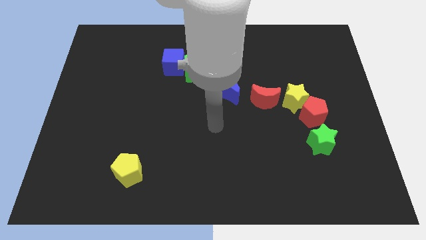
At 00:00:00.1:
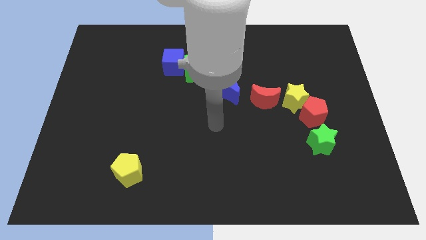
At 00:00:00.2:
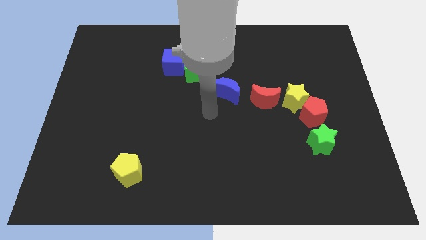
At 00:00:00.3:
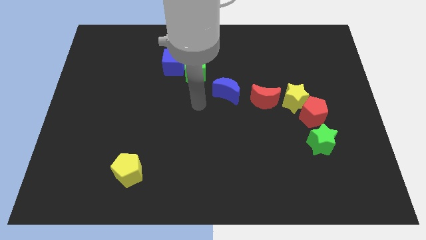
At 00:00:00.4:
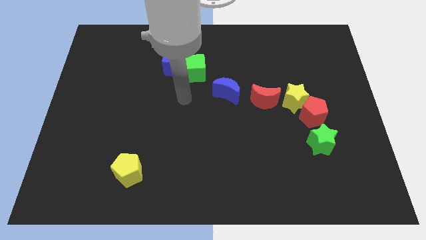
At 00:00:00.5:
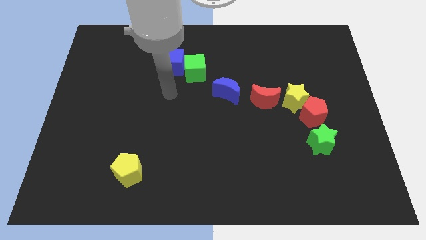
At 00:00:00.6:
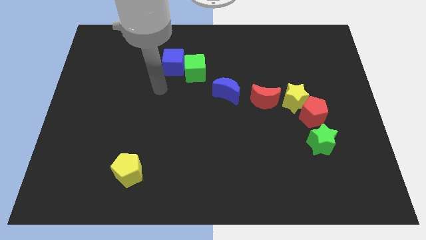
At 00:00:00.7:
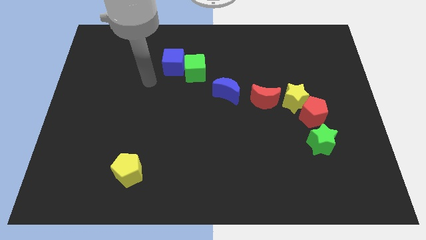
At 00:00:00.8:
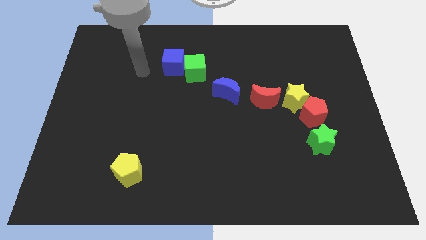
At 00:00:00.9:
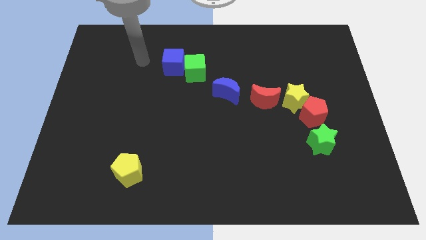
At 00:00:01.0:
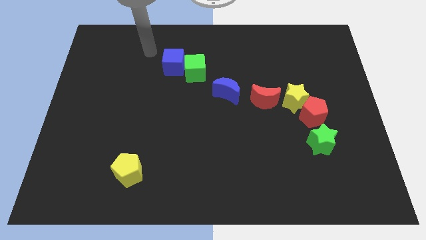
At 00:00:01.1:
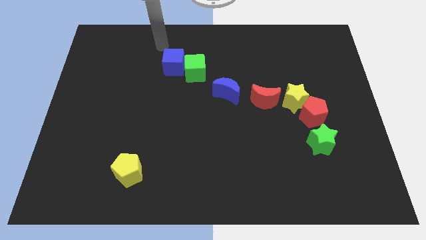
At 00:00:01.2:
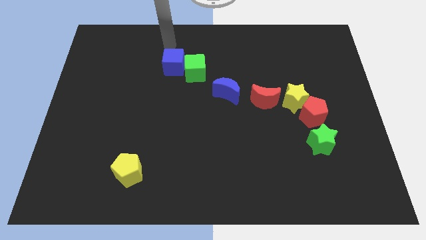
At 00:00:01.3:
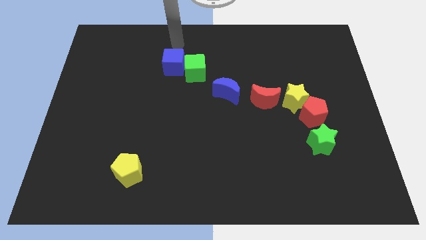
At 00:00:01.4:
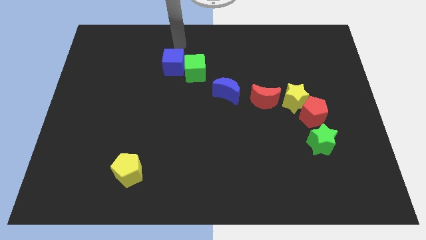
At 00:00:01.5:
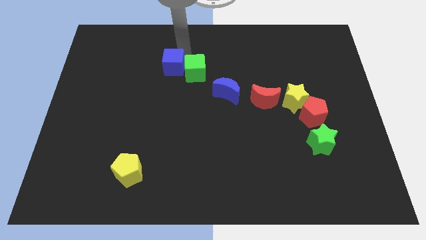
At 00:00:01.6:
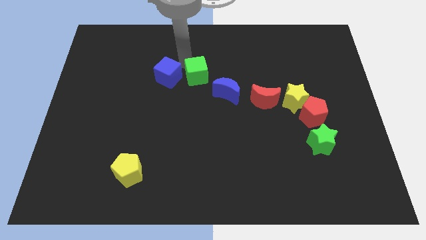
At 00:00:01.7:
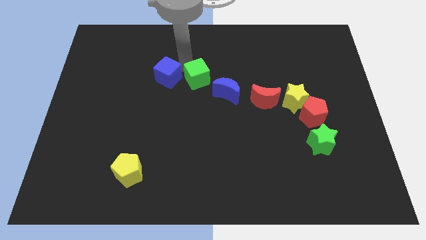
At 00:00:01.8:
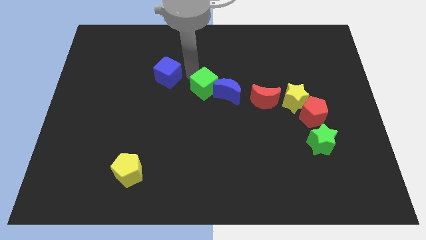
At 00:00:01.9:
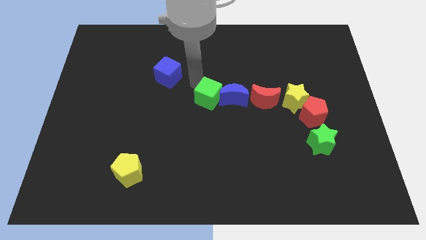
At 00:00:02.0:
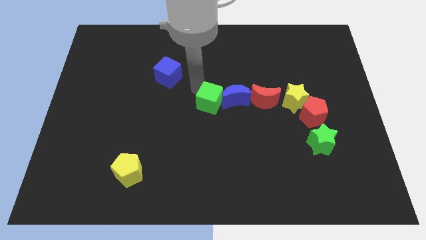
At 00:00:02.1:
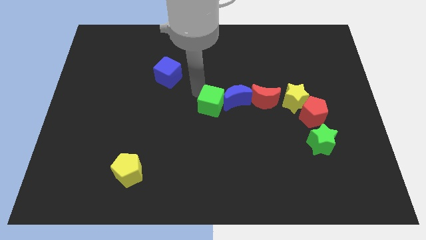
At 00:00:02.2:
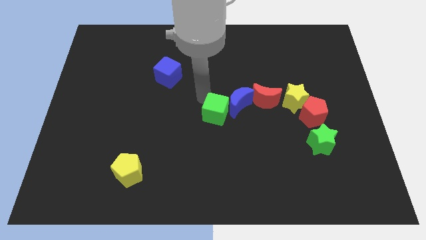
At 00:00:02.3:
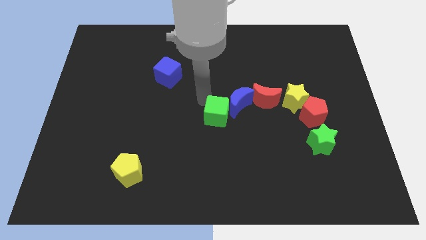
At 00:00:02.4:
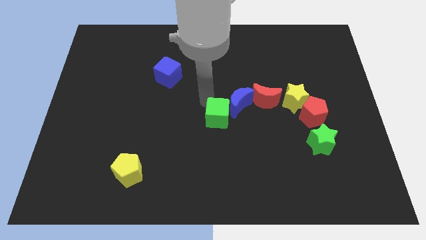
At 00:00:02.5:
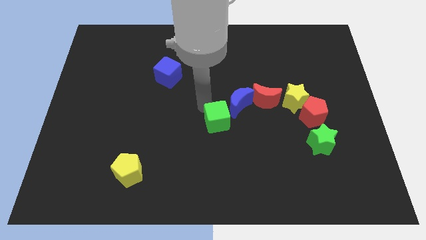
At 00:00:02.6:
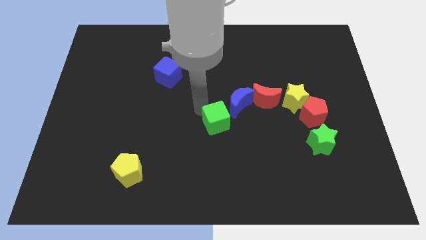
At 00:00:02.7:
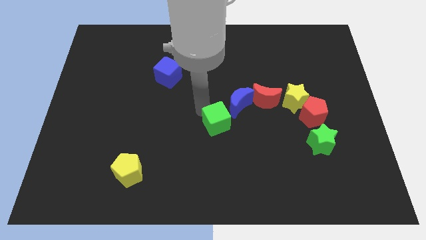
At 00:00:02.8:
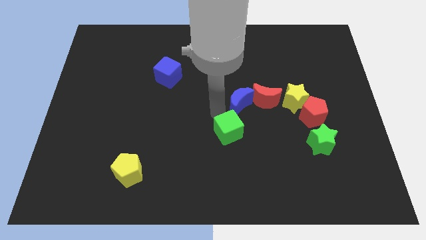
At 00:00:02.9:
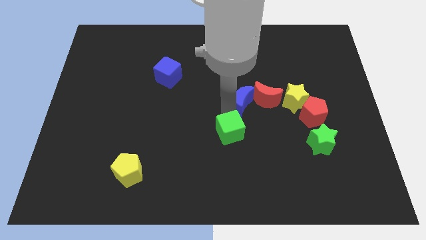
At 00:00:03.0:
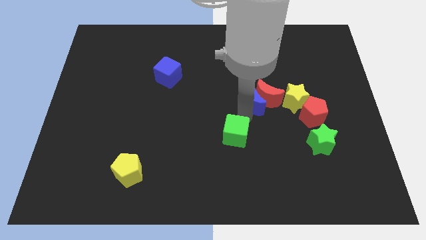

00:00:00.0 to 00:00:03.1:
push the green cube to the bottom left to the blue crescent

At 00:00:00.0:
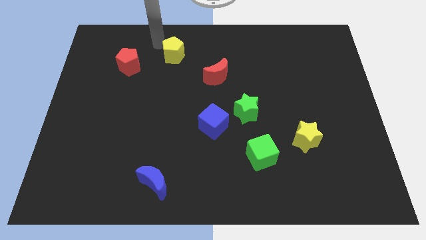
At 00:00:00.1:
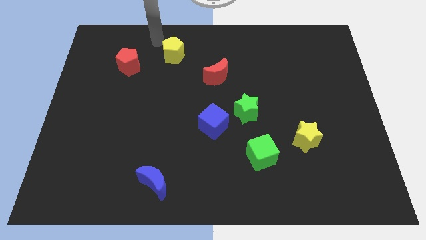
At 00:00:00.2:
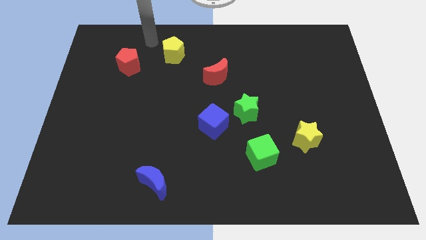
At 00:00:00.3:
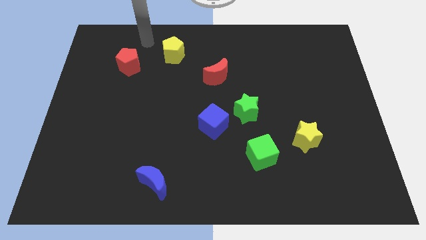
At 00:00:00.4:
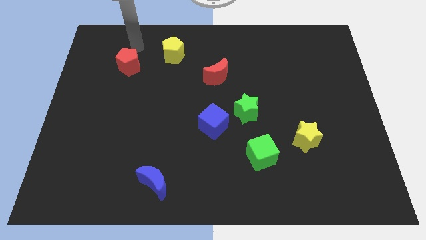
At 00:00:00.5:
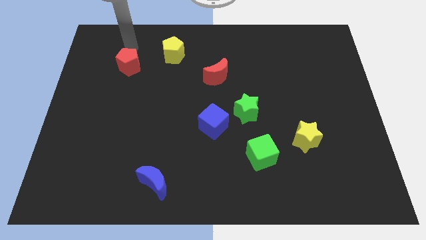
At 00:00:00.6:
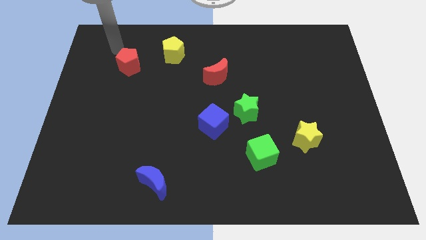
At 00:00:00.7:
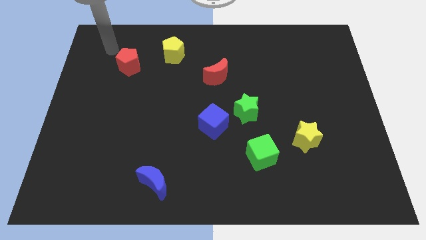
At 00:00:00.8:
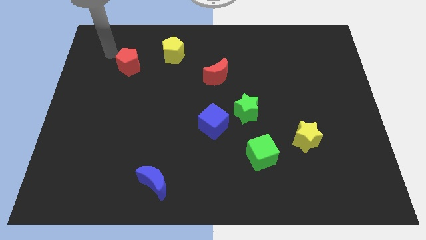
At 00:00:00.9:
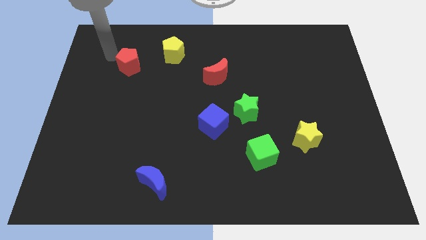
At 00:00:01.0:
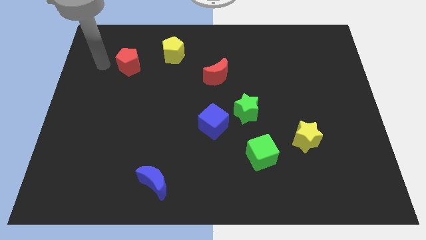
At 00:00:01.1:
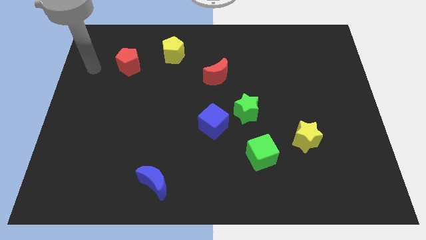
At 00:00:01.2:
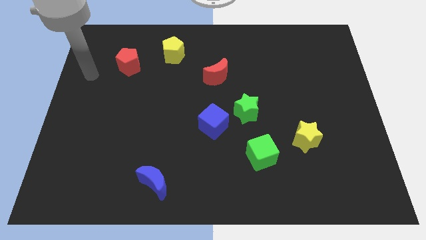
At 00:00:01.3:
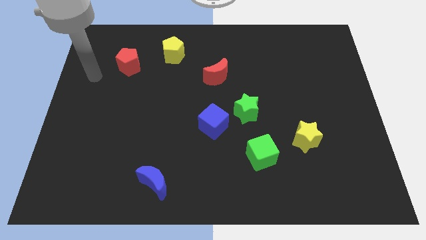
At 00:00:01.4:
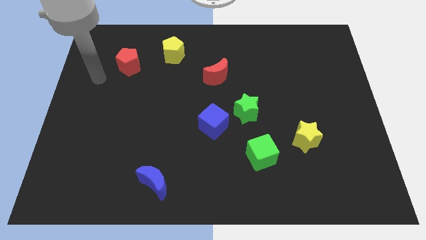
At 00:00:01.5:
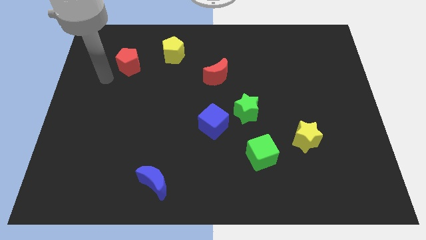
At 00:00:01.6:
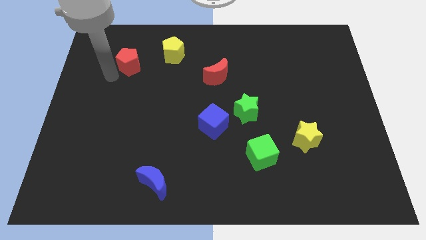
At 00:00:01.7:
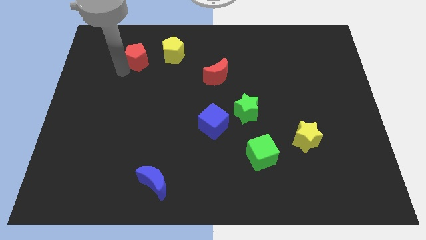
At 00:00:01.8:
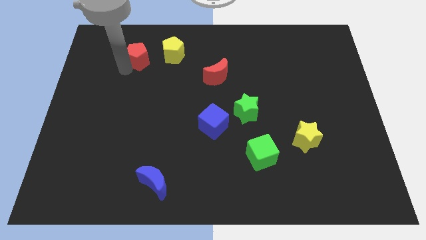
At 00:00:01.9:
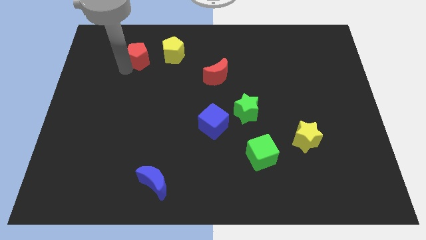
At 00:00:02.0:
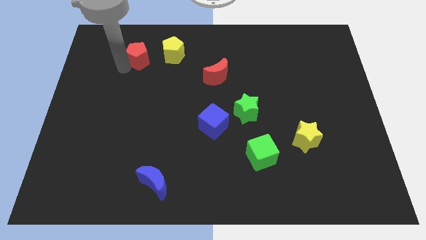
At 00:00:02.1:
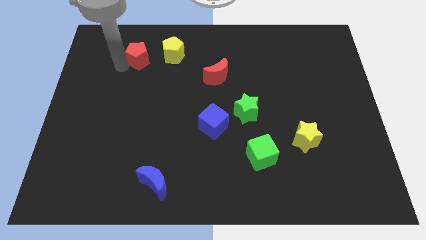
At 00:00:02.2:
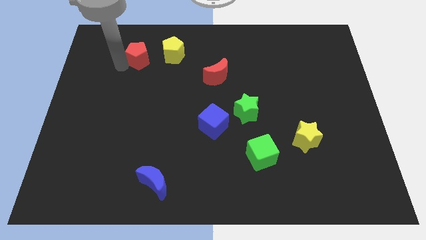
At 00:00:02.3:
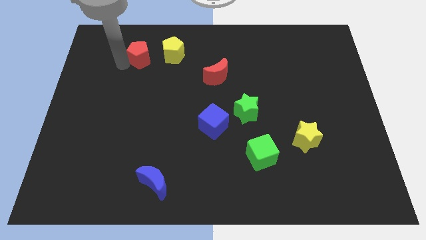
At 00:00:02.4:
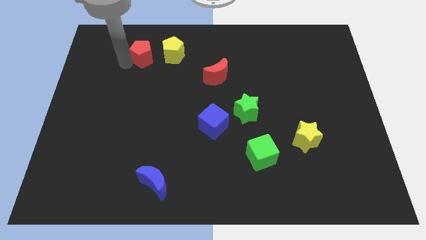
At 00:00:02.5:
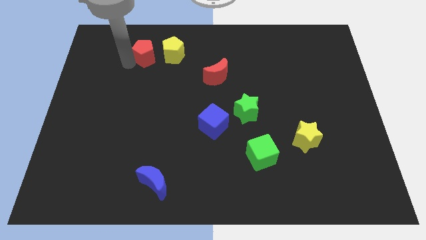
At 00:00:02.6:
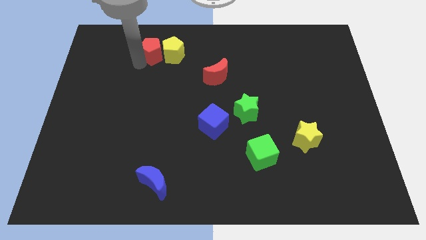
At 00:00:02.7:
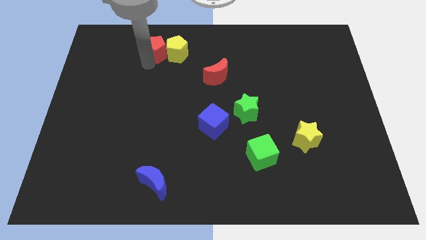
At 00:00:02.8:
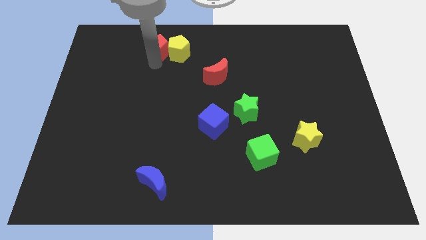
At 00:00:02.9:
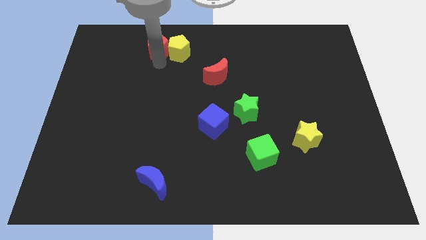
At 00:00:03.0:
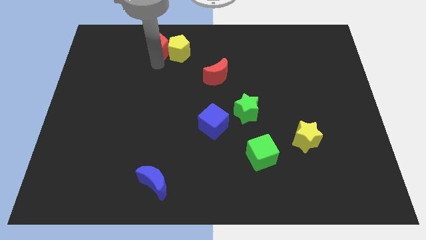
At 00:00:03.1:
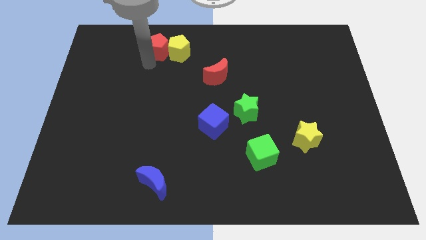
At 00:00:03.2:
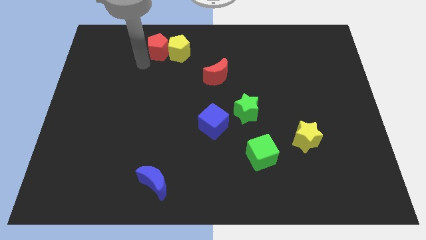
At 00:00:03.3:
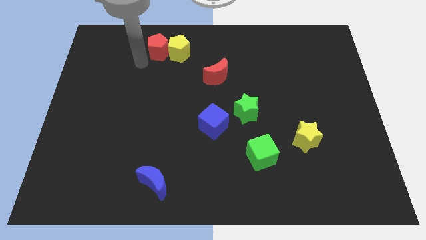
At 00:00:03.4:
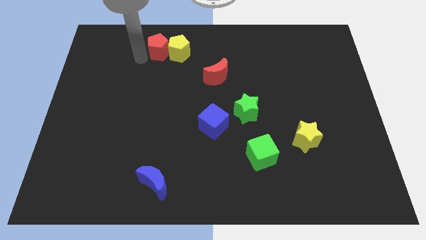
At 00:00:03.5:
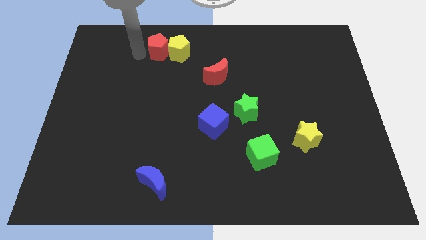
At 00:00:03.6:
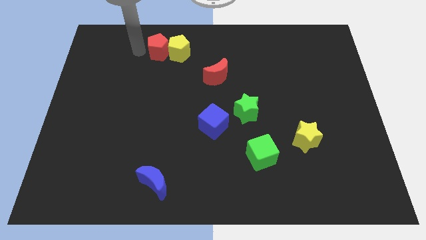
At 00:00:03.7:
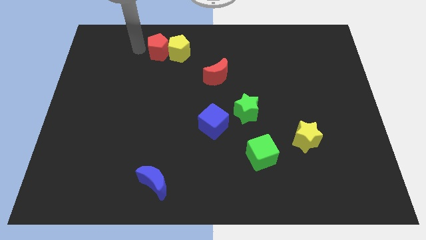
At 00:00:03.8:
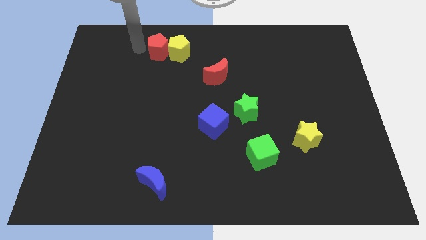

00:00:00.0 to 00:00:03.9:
move the red pentagon into the yellow pentagon

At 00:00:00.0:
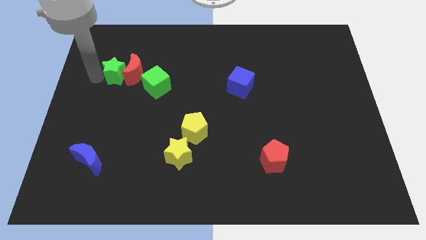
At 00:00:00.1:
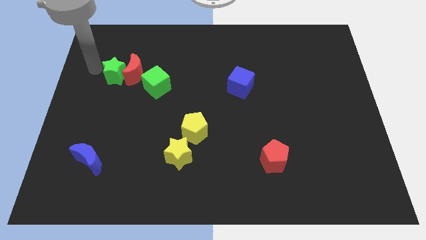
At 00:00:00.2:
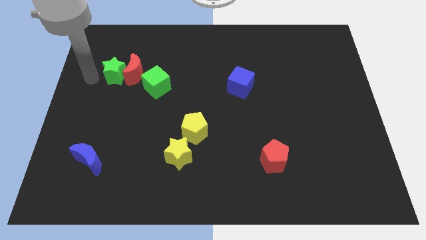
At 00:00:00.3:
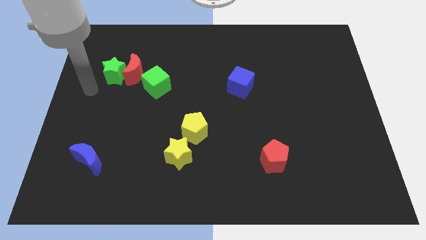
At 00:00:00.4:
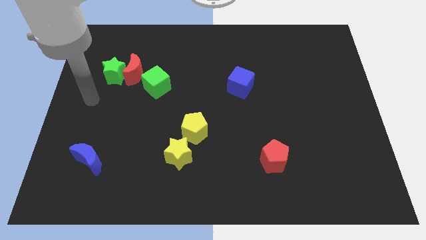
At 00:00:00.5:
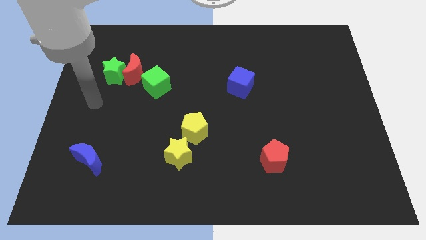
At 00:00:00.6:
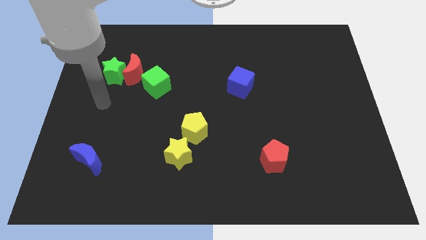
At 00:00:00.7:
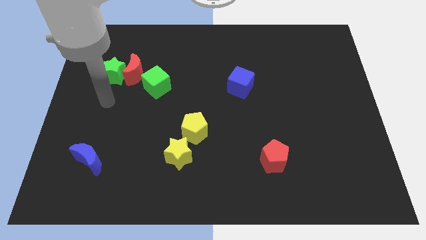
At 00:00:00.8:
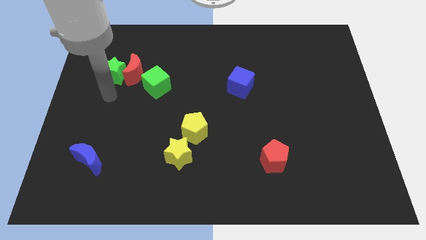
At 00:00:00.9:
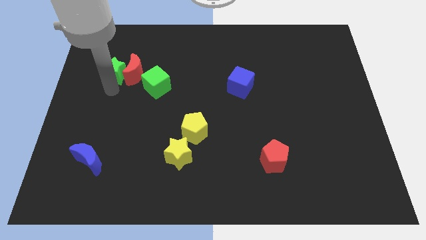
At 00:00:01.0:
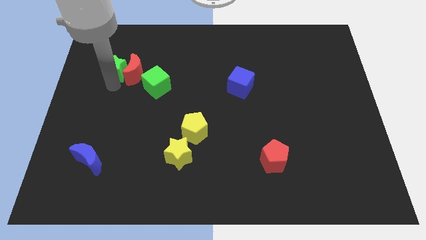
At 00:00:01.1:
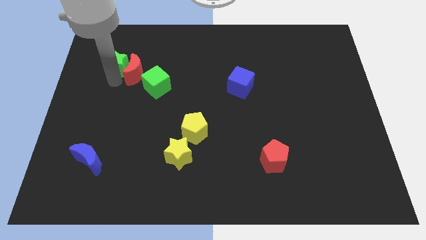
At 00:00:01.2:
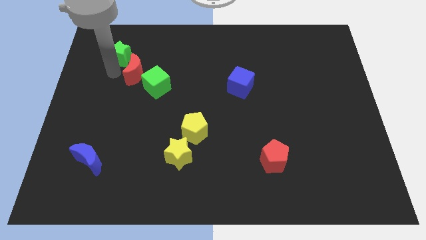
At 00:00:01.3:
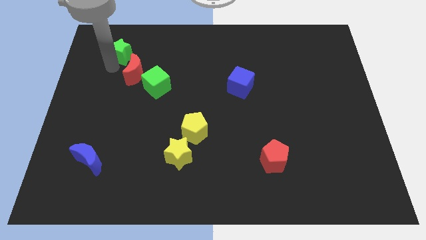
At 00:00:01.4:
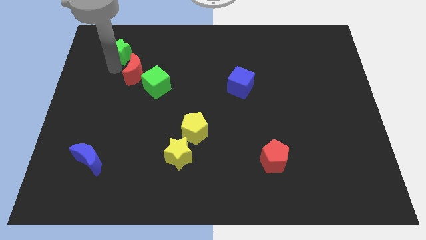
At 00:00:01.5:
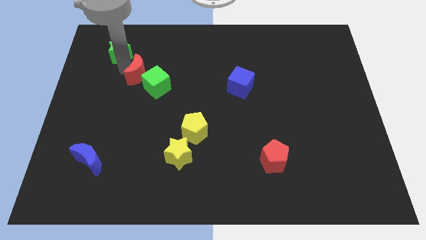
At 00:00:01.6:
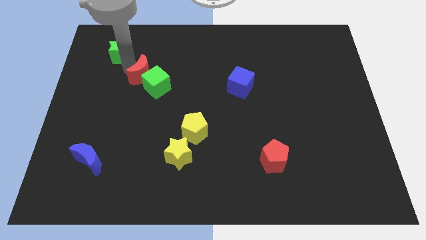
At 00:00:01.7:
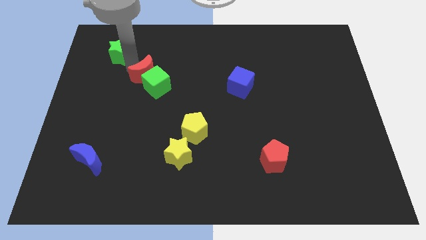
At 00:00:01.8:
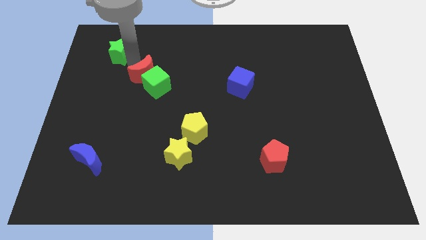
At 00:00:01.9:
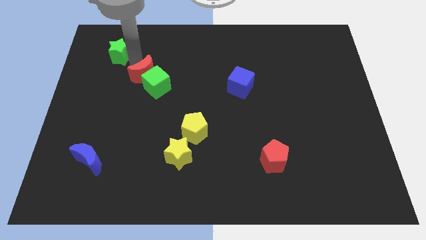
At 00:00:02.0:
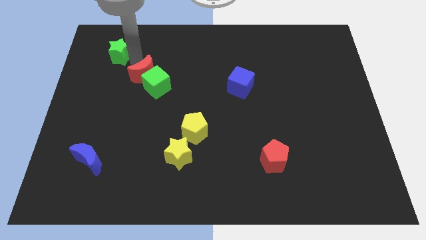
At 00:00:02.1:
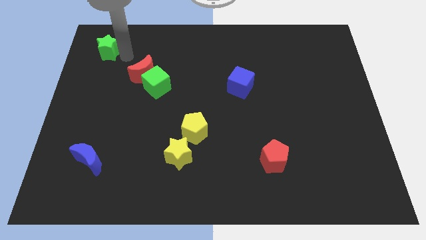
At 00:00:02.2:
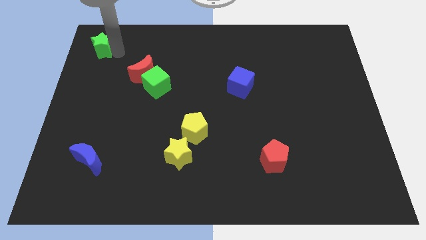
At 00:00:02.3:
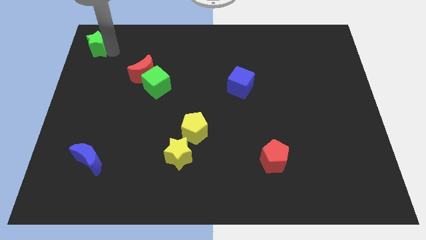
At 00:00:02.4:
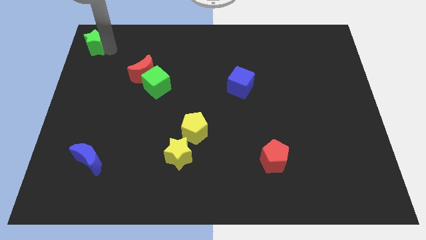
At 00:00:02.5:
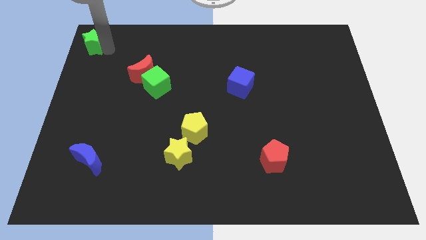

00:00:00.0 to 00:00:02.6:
separate the green star and red crescent
